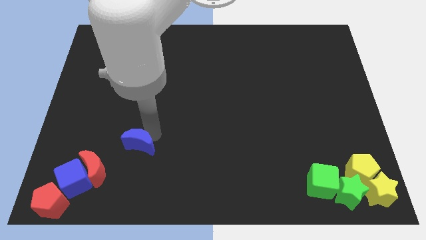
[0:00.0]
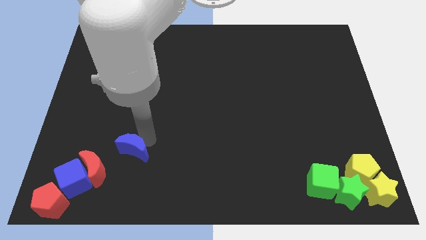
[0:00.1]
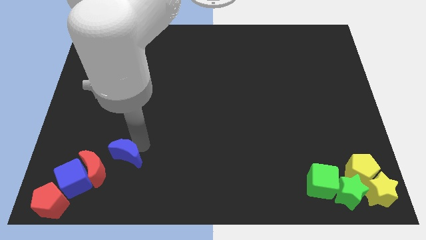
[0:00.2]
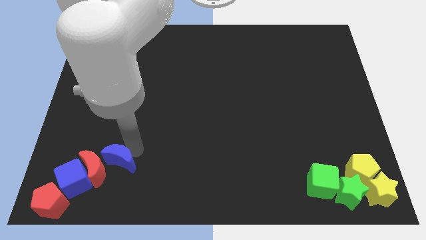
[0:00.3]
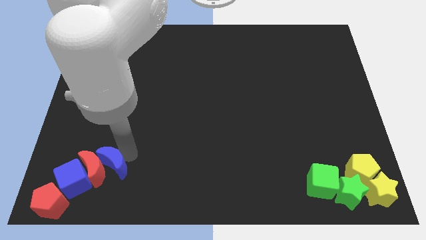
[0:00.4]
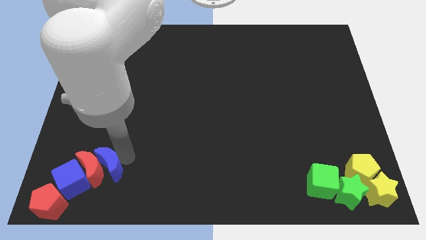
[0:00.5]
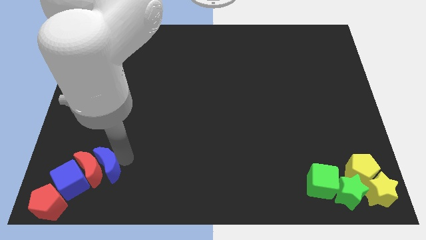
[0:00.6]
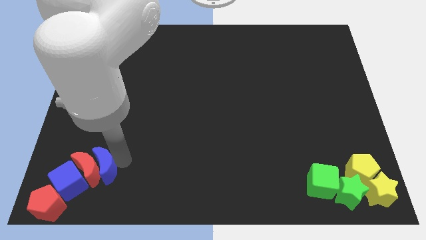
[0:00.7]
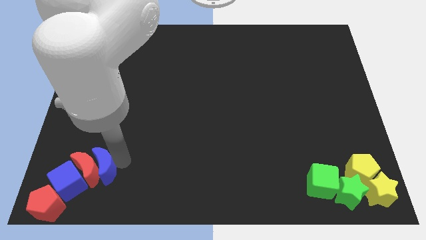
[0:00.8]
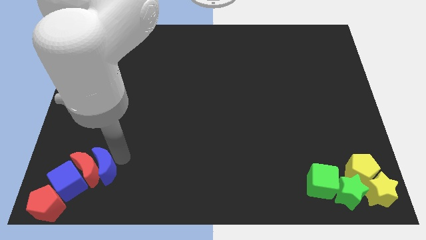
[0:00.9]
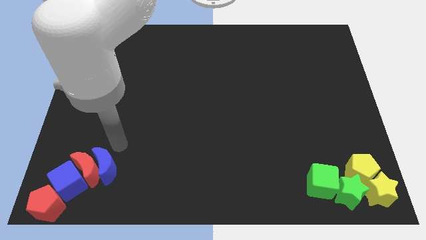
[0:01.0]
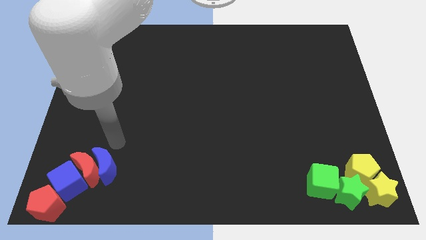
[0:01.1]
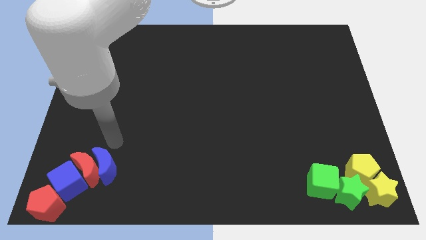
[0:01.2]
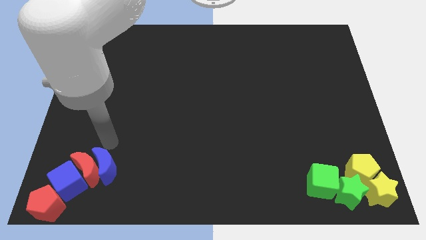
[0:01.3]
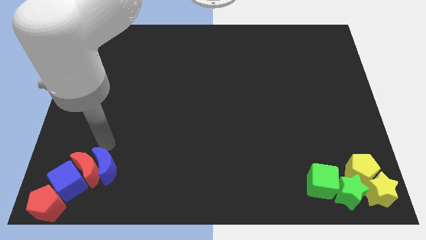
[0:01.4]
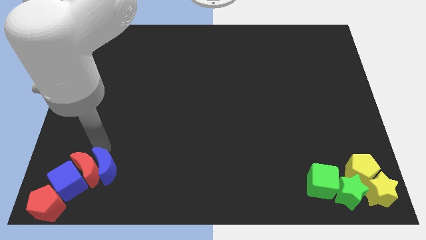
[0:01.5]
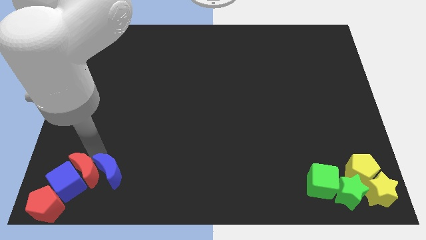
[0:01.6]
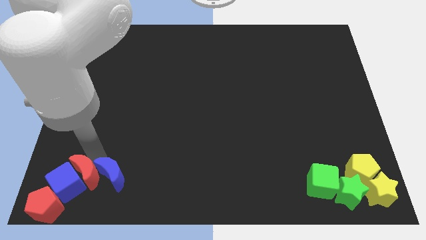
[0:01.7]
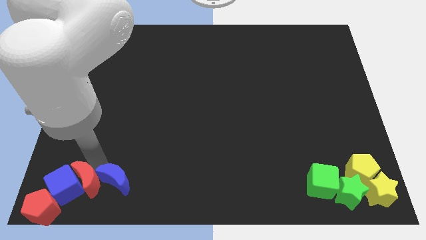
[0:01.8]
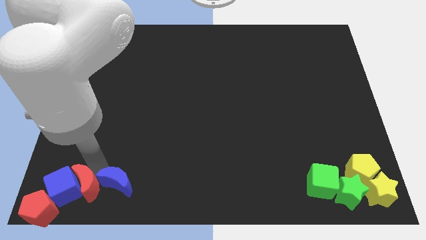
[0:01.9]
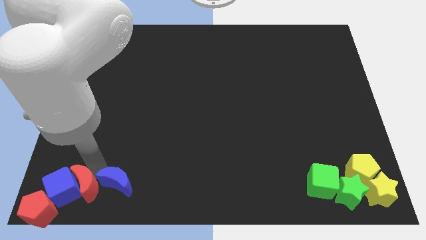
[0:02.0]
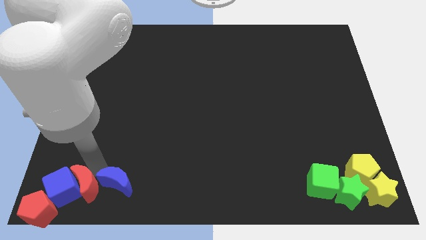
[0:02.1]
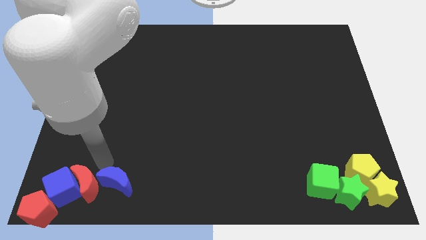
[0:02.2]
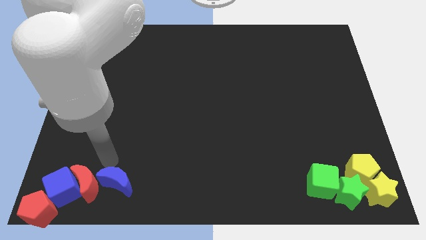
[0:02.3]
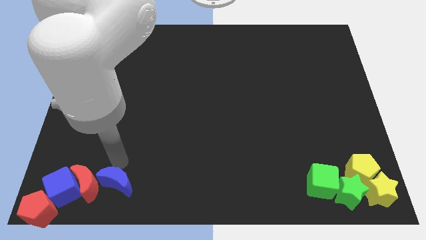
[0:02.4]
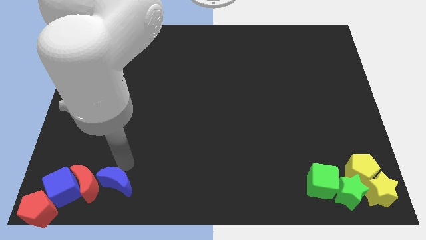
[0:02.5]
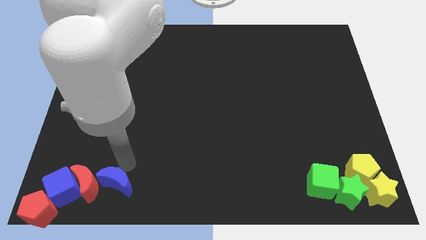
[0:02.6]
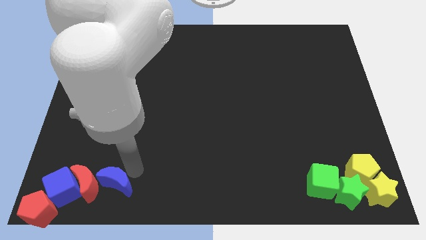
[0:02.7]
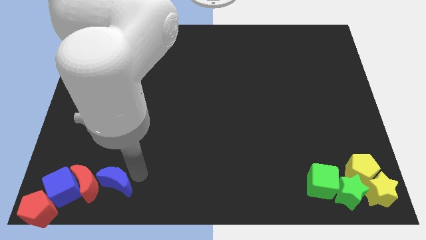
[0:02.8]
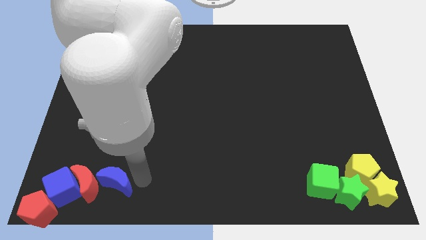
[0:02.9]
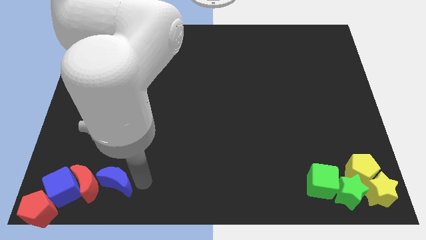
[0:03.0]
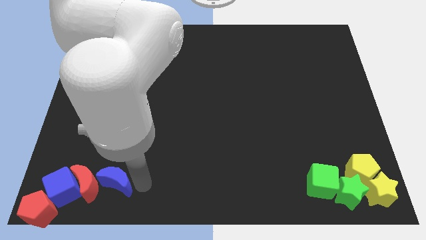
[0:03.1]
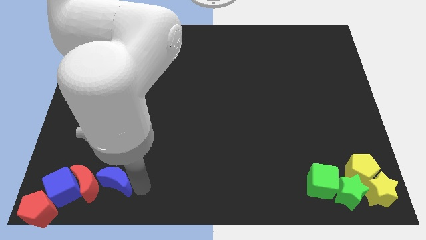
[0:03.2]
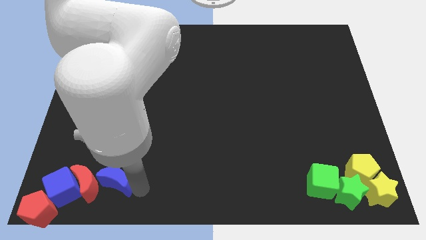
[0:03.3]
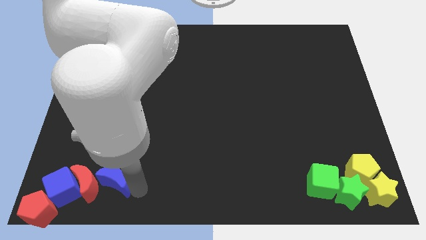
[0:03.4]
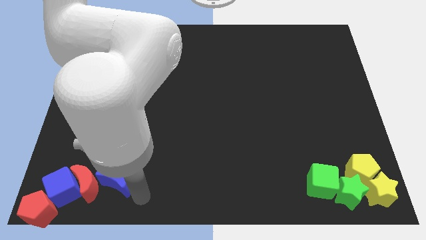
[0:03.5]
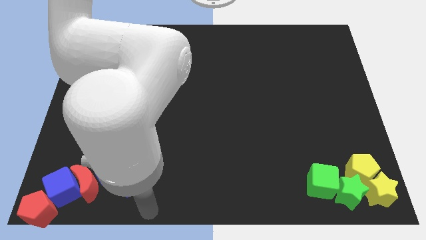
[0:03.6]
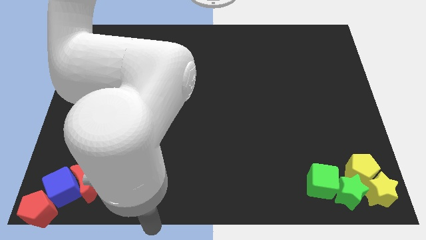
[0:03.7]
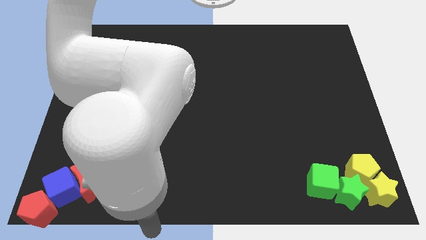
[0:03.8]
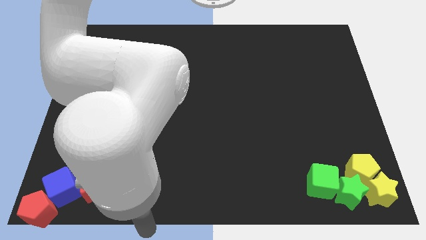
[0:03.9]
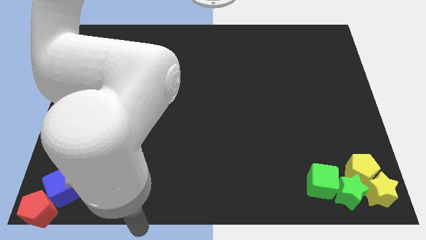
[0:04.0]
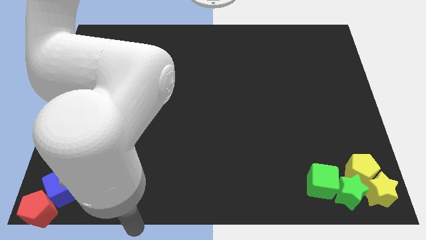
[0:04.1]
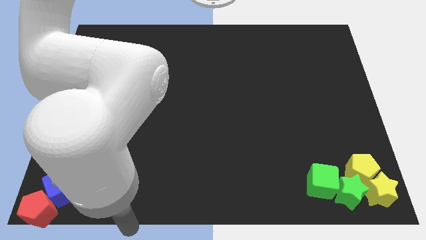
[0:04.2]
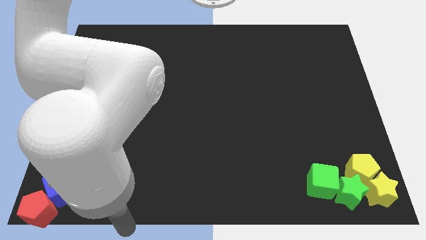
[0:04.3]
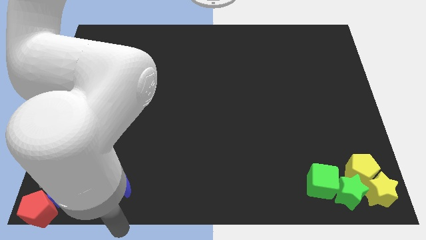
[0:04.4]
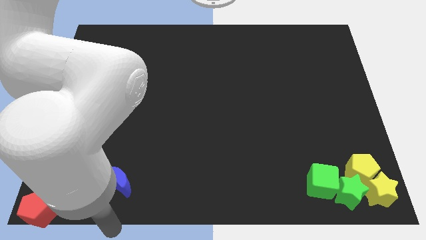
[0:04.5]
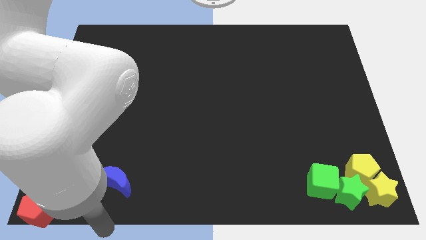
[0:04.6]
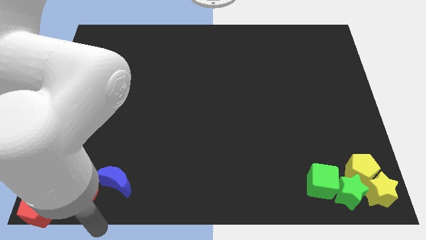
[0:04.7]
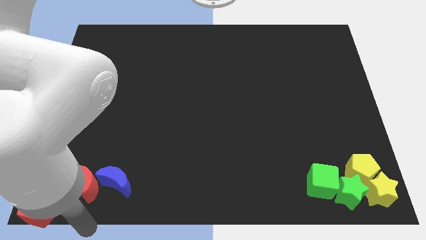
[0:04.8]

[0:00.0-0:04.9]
move the blue moon into the red moon

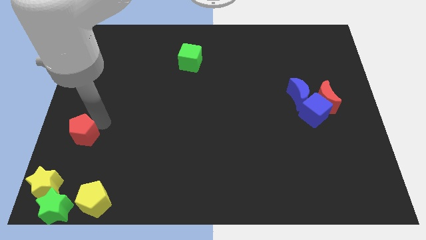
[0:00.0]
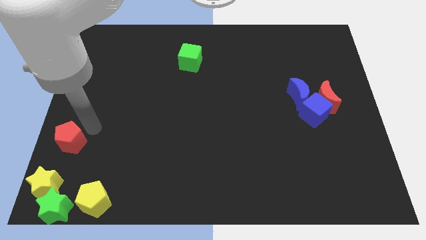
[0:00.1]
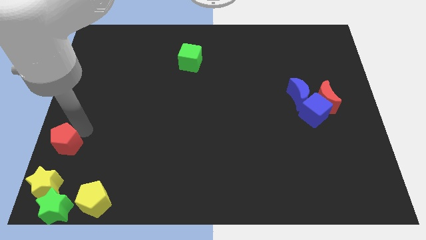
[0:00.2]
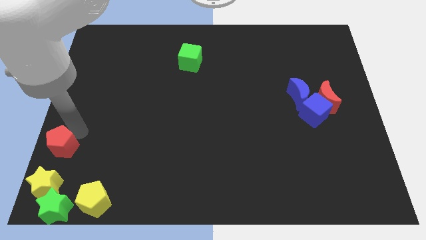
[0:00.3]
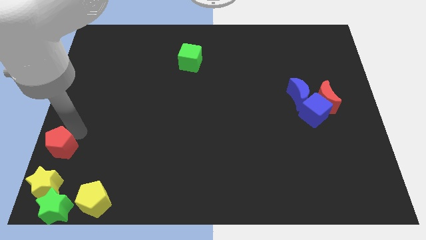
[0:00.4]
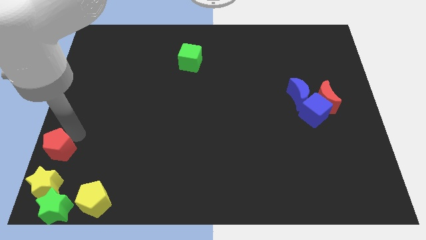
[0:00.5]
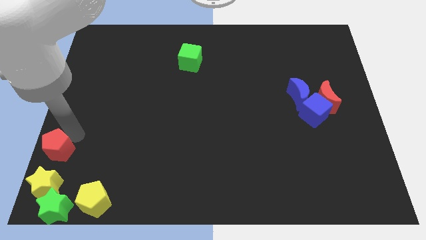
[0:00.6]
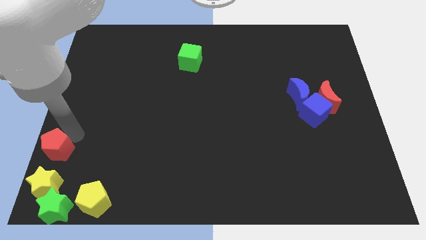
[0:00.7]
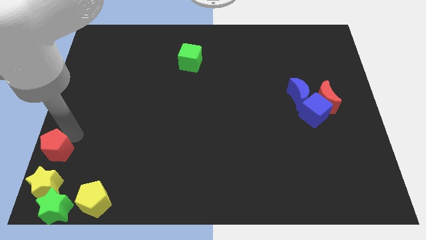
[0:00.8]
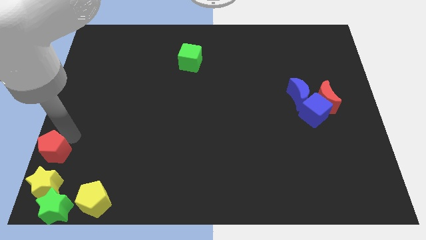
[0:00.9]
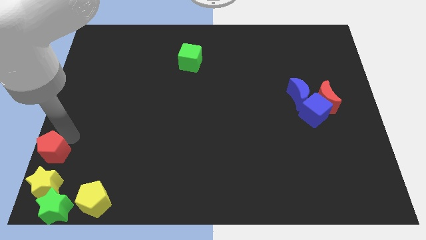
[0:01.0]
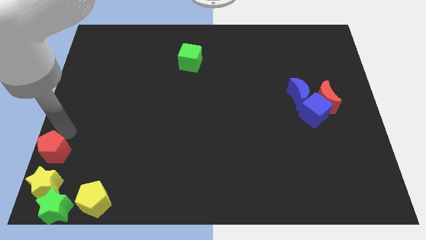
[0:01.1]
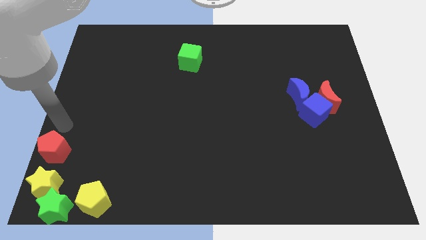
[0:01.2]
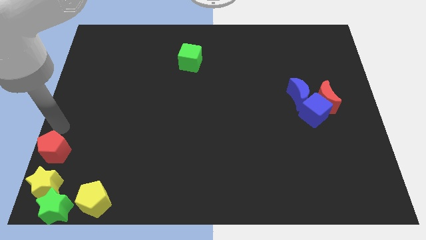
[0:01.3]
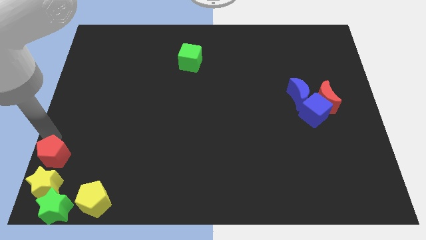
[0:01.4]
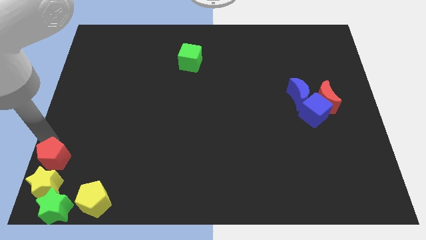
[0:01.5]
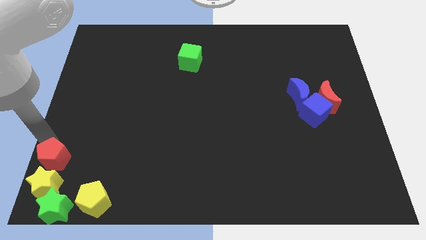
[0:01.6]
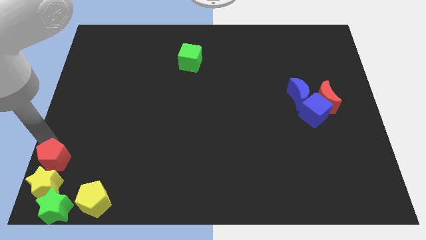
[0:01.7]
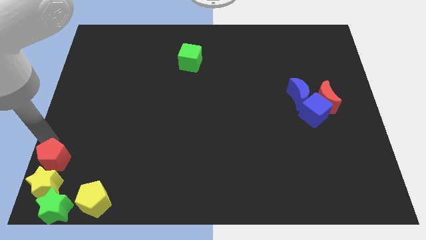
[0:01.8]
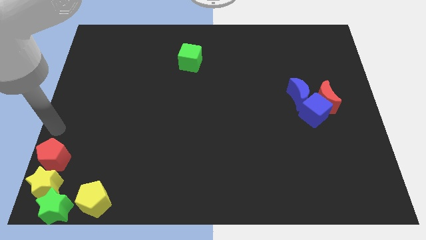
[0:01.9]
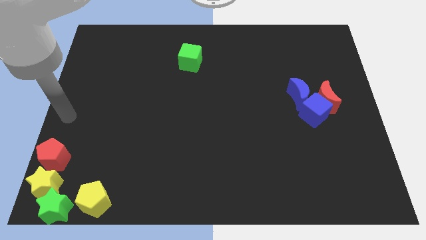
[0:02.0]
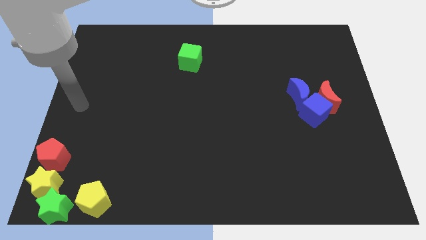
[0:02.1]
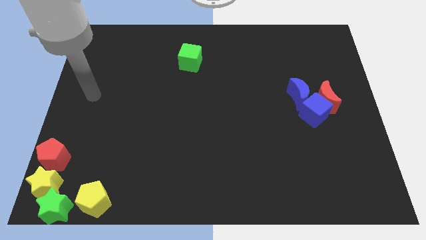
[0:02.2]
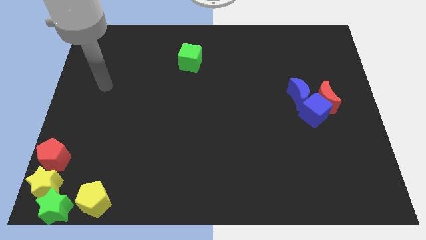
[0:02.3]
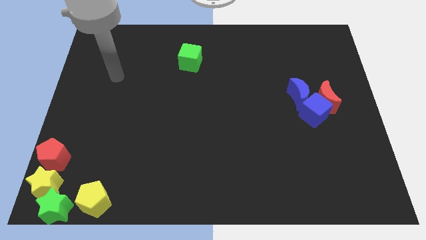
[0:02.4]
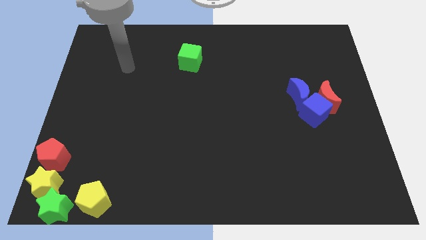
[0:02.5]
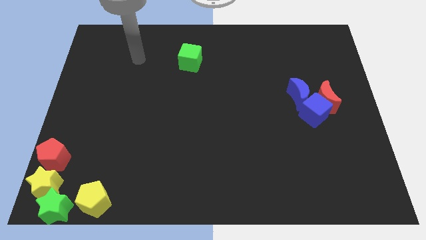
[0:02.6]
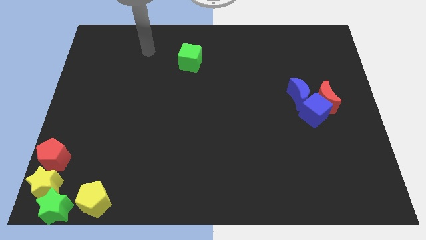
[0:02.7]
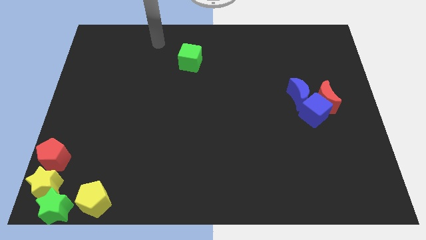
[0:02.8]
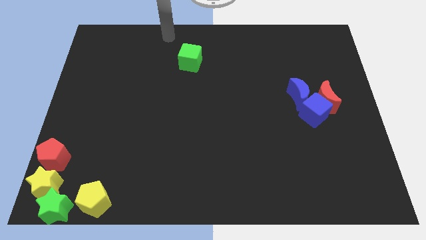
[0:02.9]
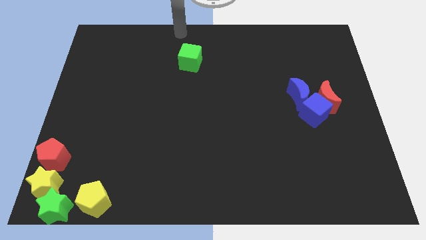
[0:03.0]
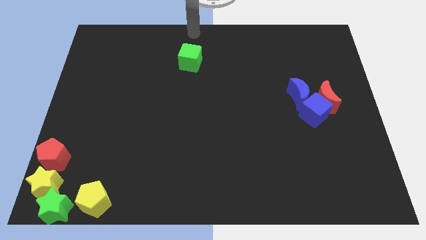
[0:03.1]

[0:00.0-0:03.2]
move the red pentagon to the top side of the yellow star

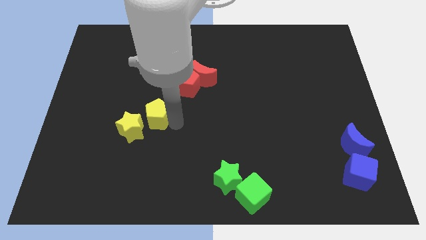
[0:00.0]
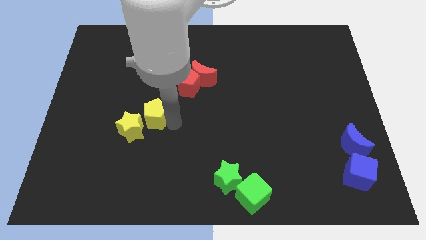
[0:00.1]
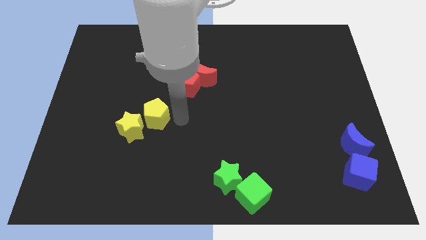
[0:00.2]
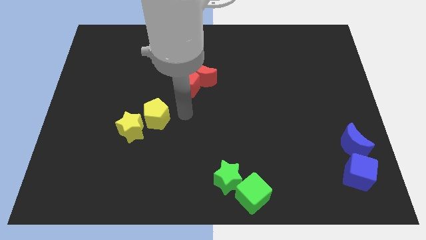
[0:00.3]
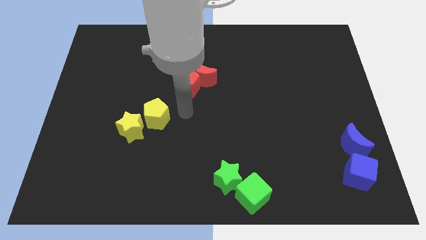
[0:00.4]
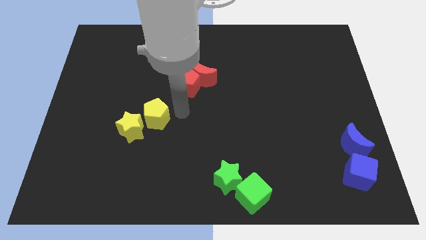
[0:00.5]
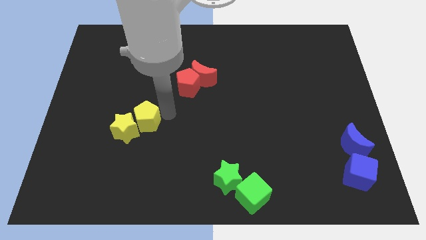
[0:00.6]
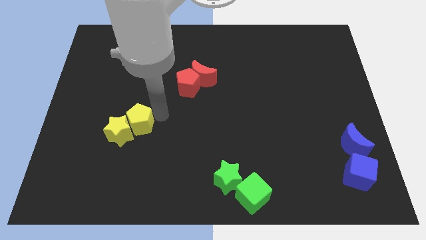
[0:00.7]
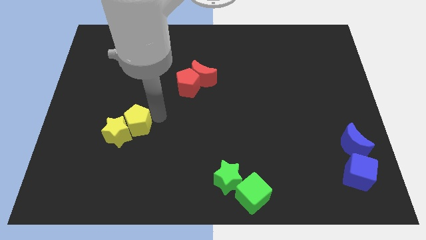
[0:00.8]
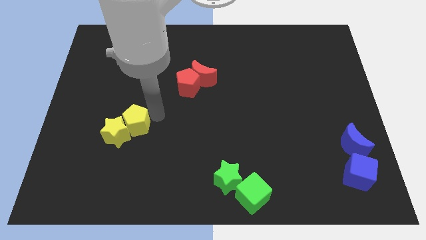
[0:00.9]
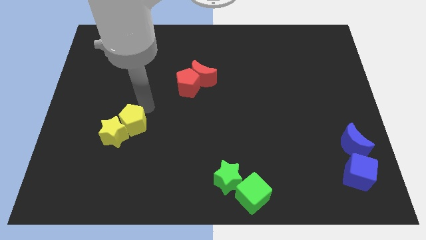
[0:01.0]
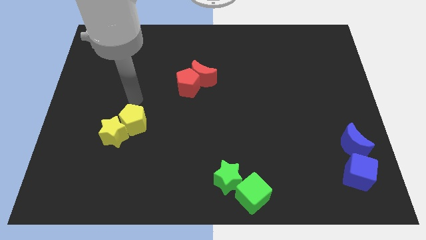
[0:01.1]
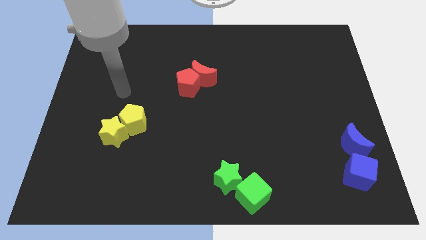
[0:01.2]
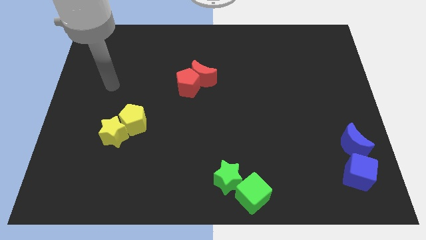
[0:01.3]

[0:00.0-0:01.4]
push the yellow blocks slightly to the left side of the board
